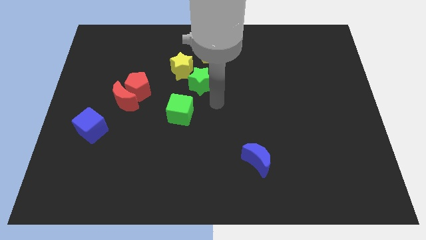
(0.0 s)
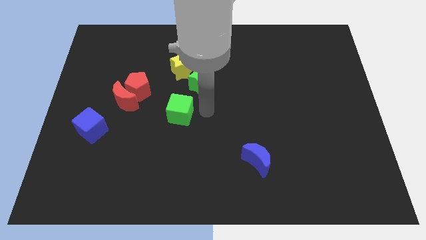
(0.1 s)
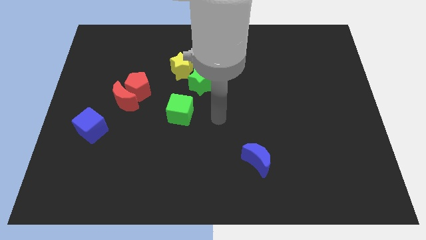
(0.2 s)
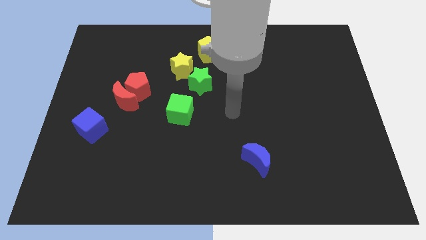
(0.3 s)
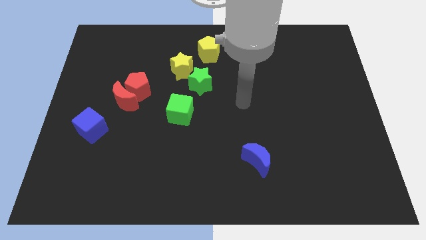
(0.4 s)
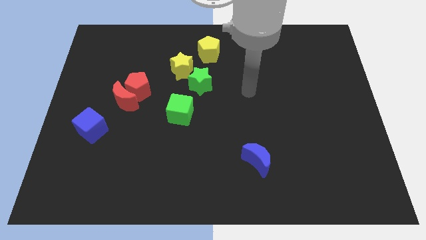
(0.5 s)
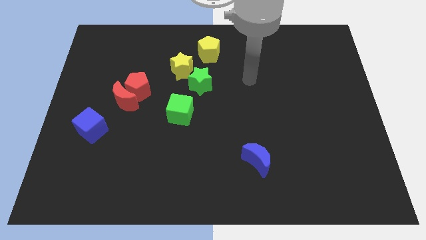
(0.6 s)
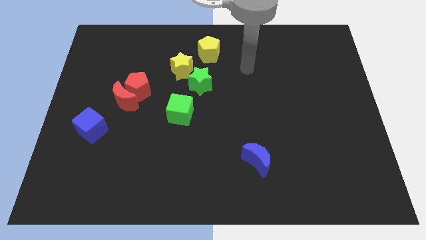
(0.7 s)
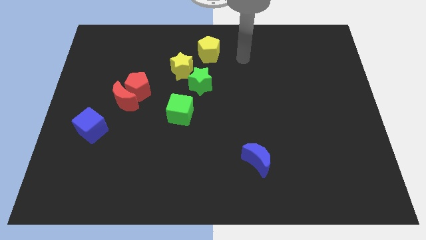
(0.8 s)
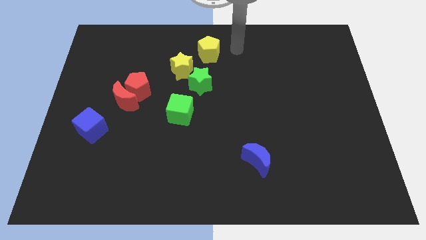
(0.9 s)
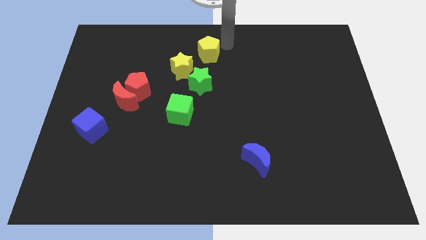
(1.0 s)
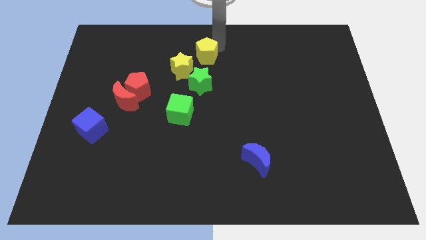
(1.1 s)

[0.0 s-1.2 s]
point your arm at the right of the yellow pentagon

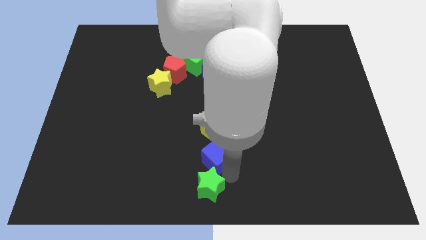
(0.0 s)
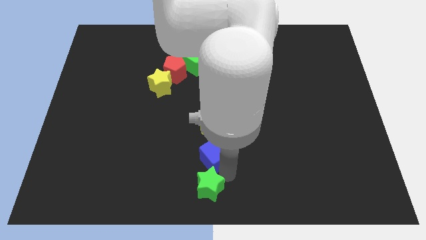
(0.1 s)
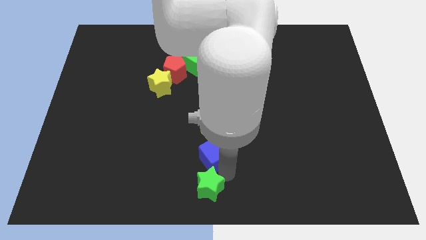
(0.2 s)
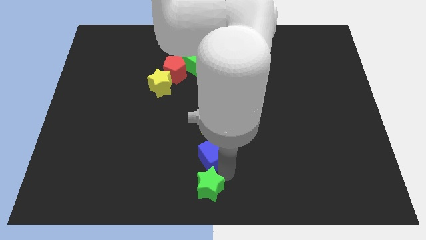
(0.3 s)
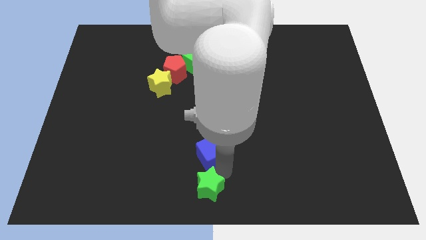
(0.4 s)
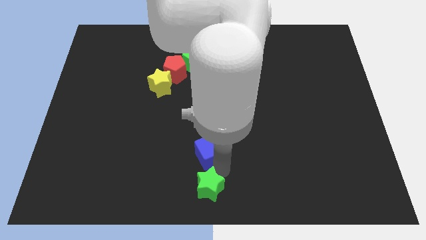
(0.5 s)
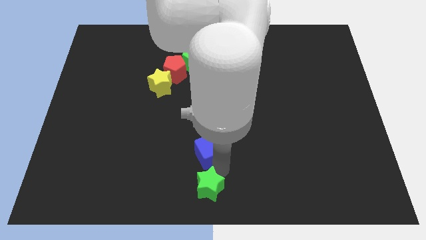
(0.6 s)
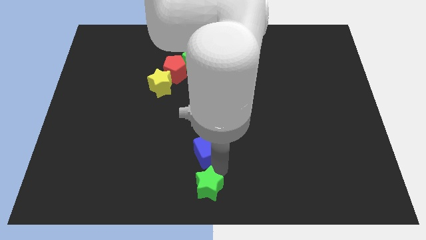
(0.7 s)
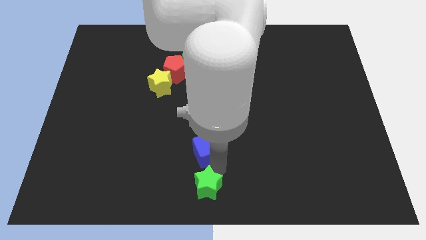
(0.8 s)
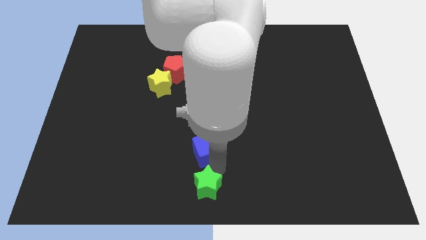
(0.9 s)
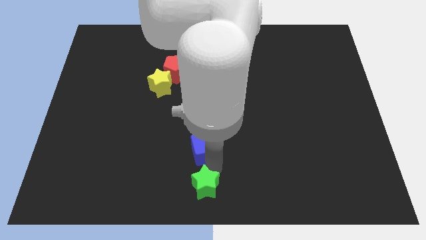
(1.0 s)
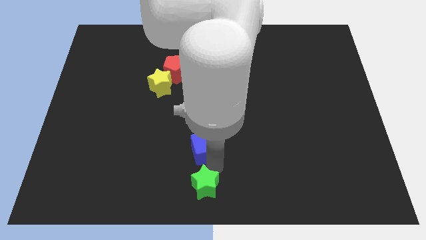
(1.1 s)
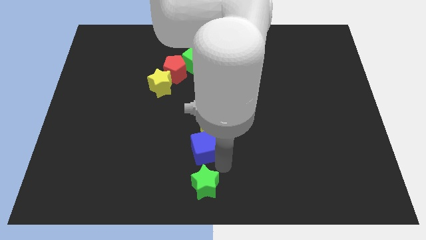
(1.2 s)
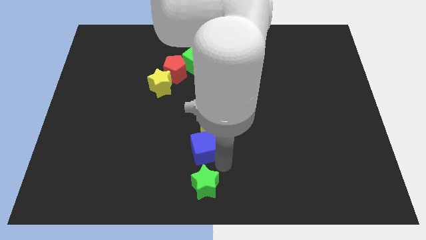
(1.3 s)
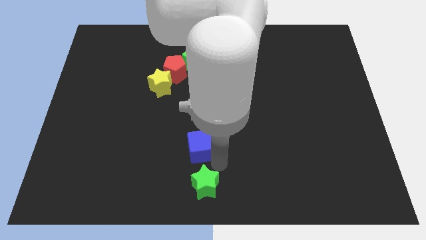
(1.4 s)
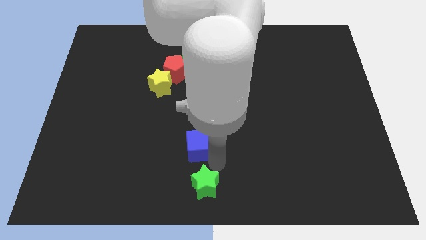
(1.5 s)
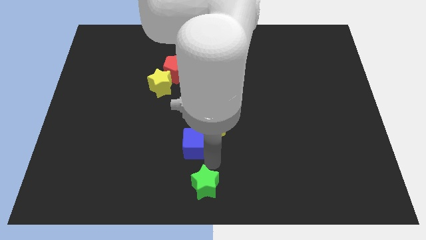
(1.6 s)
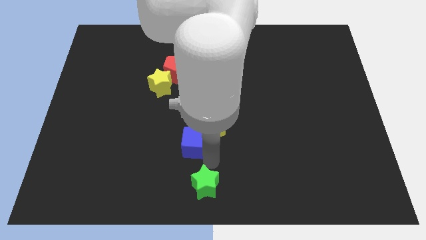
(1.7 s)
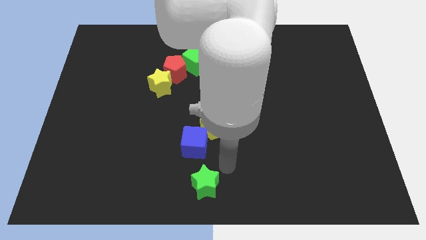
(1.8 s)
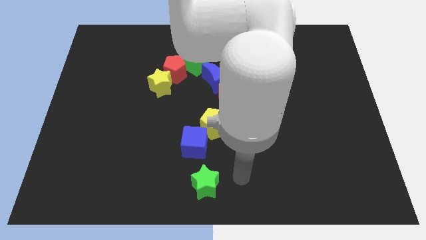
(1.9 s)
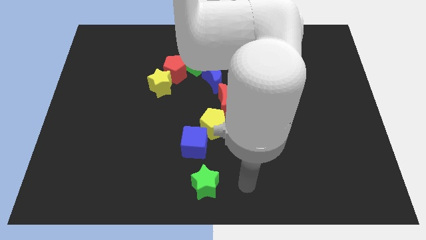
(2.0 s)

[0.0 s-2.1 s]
separate the blue cube and green star

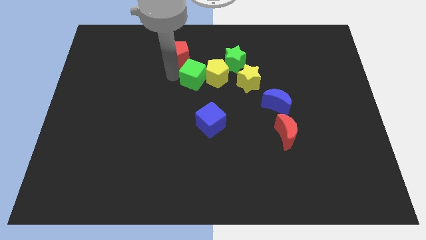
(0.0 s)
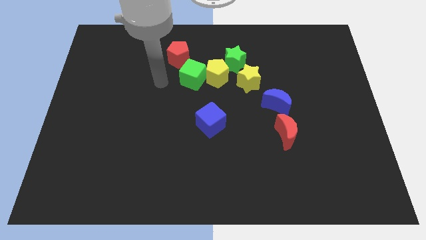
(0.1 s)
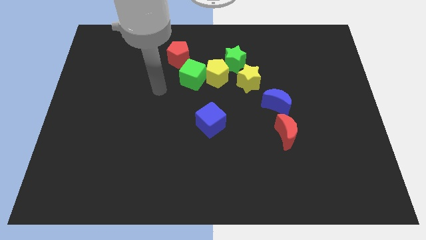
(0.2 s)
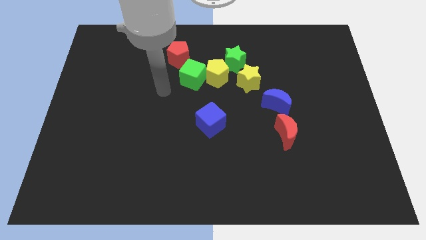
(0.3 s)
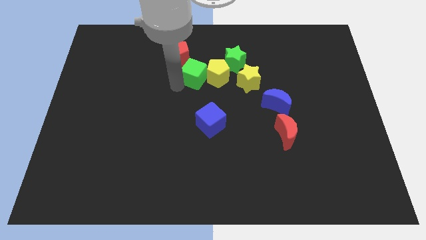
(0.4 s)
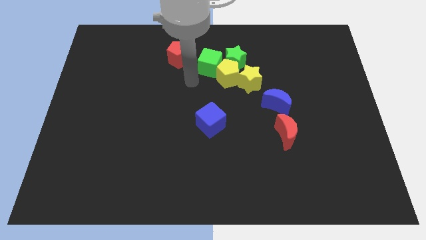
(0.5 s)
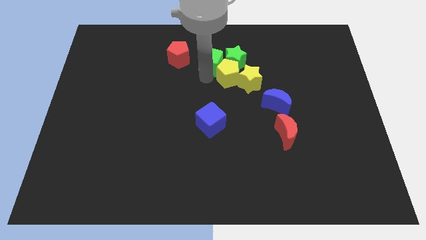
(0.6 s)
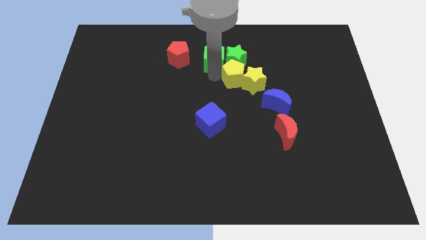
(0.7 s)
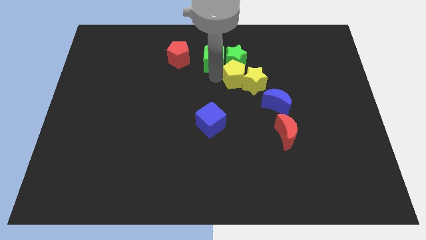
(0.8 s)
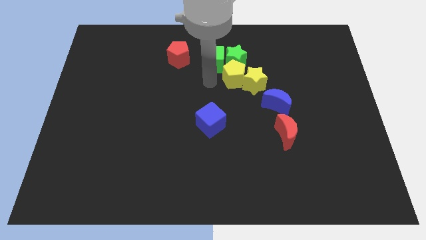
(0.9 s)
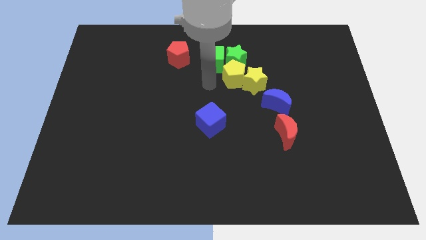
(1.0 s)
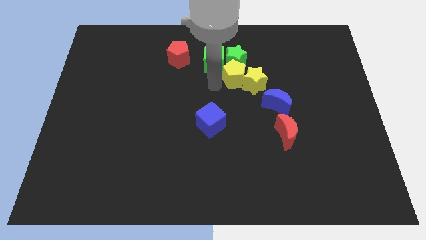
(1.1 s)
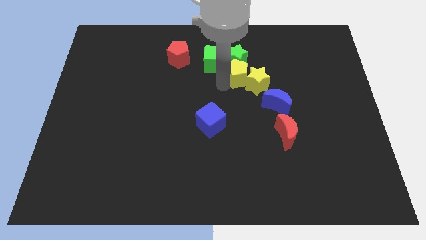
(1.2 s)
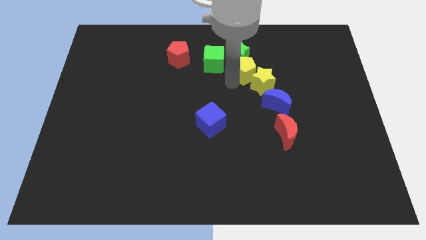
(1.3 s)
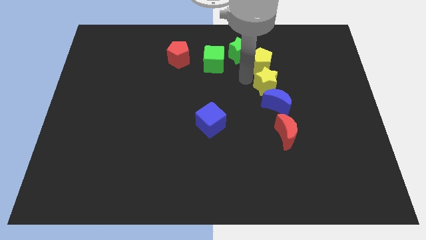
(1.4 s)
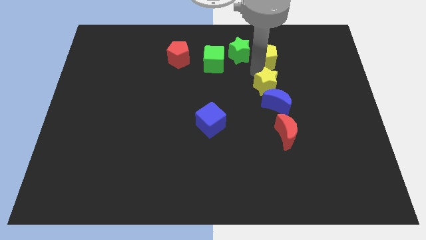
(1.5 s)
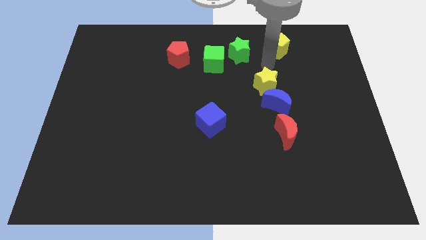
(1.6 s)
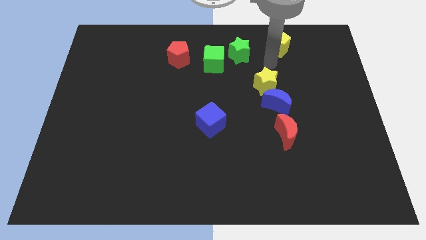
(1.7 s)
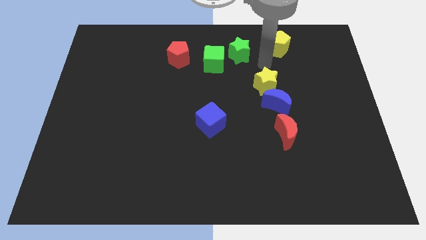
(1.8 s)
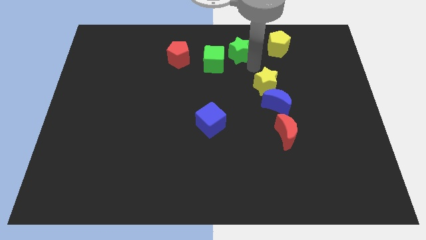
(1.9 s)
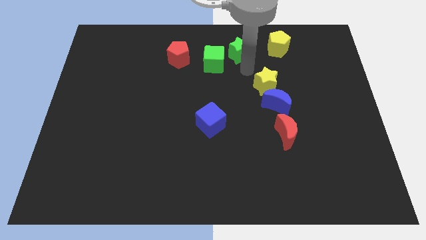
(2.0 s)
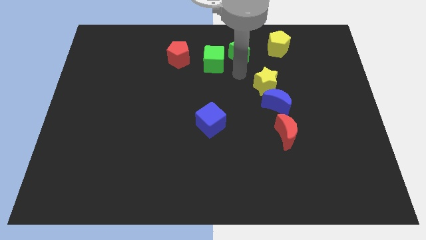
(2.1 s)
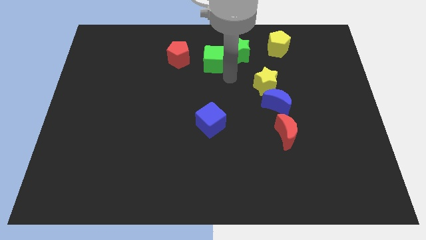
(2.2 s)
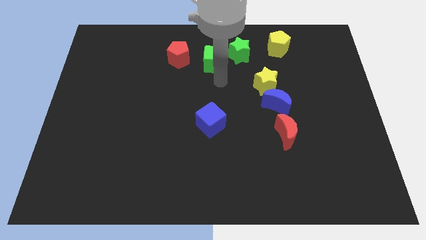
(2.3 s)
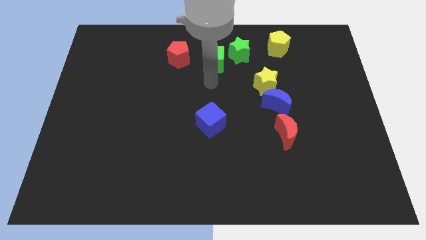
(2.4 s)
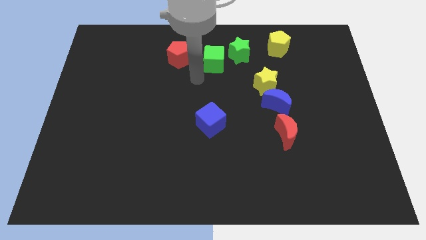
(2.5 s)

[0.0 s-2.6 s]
push the yellow pentagon to the top right side of the

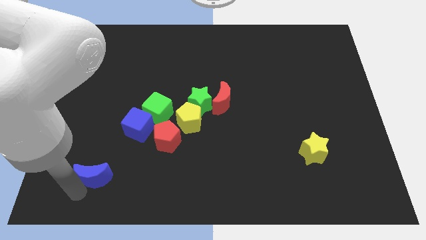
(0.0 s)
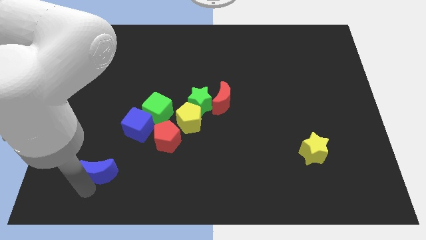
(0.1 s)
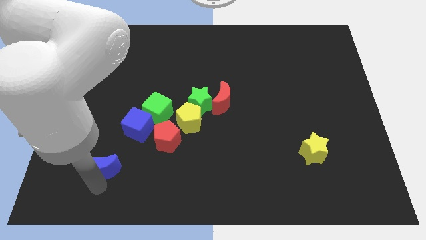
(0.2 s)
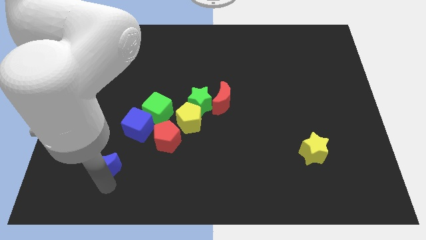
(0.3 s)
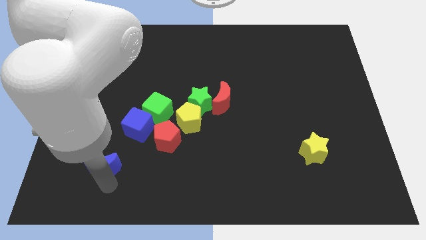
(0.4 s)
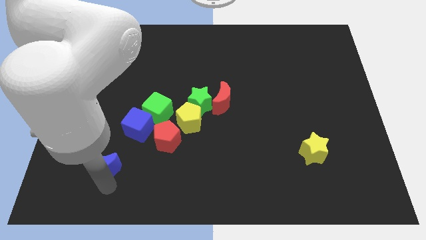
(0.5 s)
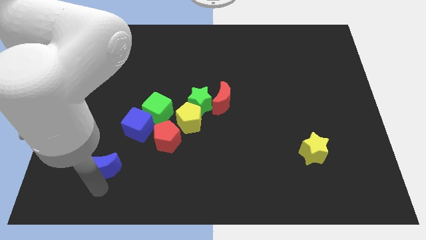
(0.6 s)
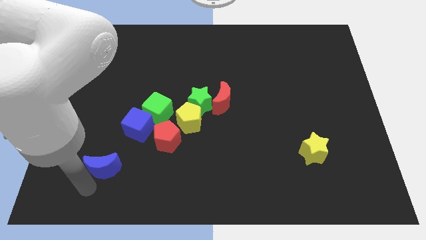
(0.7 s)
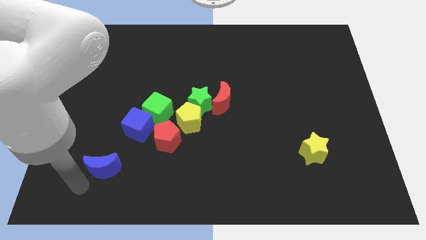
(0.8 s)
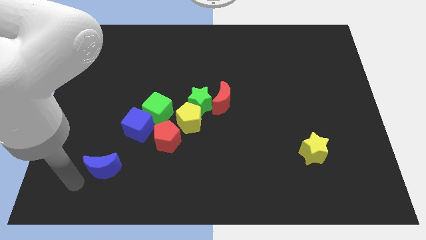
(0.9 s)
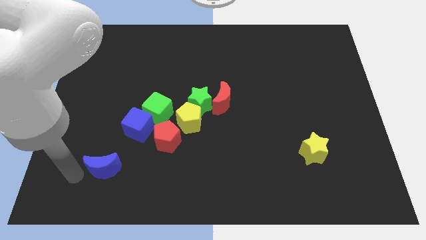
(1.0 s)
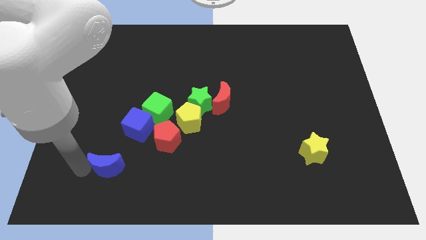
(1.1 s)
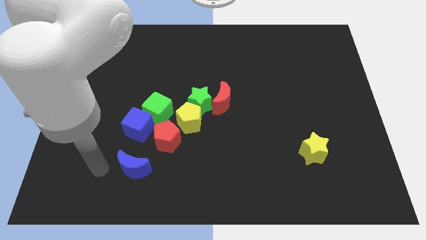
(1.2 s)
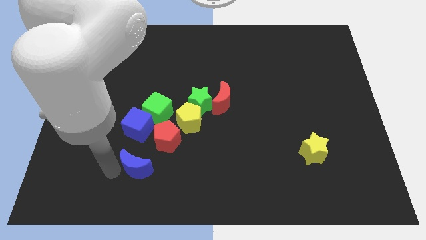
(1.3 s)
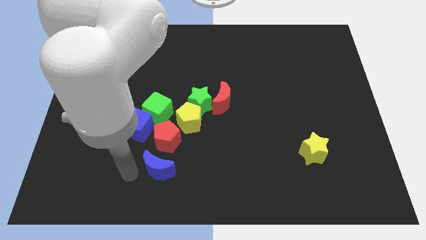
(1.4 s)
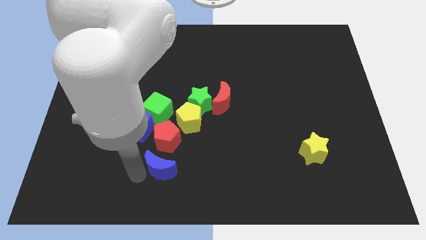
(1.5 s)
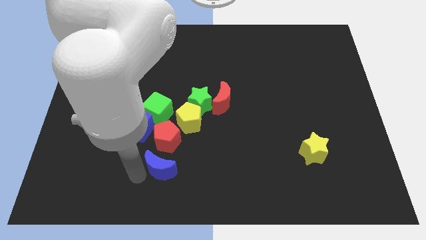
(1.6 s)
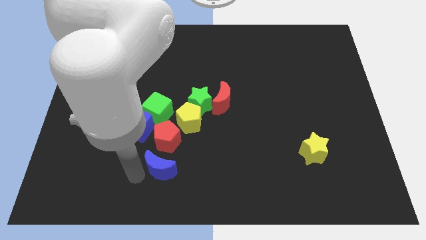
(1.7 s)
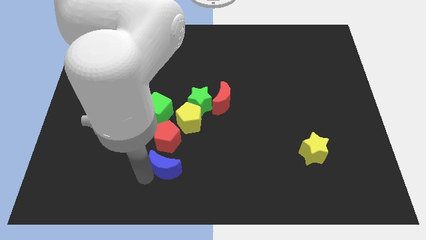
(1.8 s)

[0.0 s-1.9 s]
move the blue moon below the red pentagon

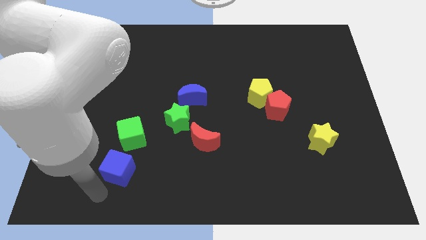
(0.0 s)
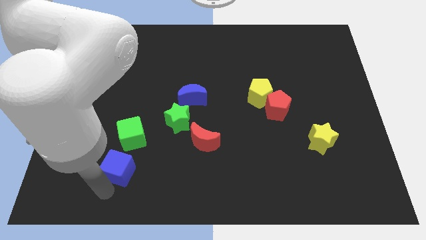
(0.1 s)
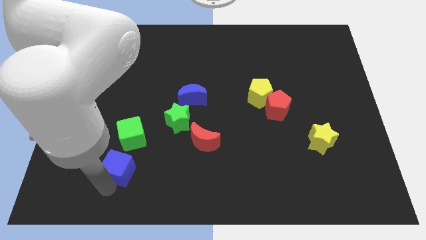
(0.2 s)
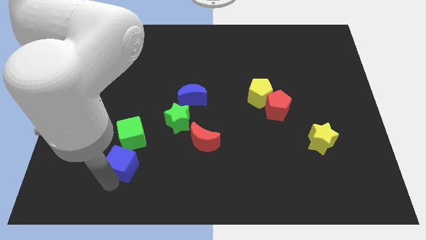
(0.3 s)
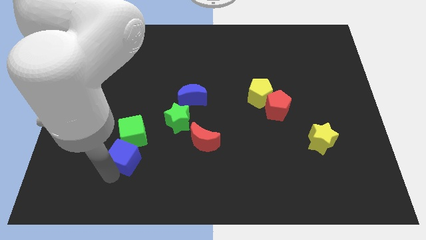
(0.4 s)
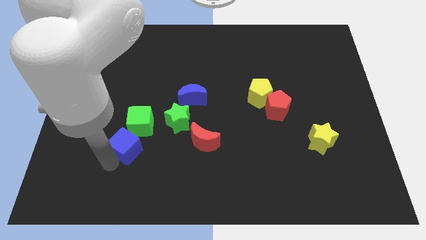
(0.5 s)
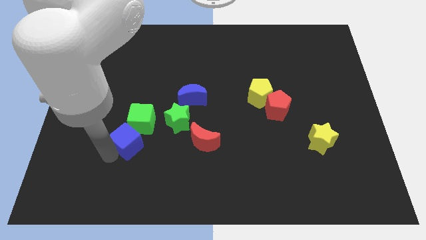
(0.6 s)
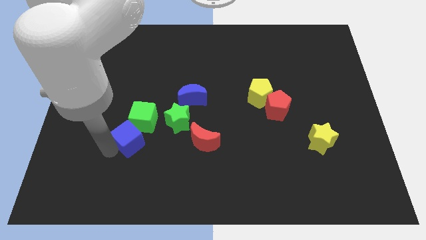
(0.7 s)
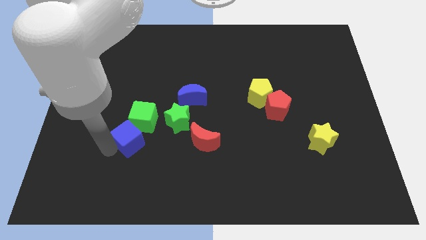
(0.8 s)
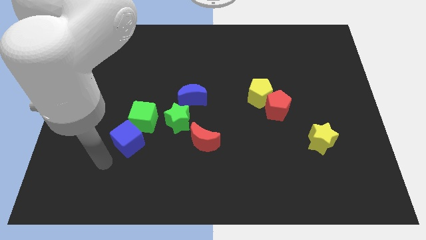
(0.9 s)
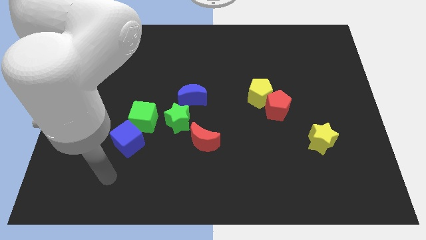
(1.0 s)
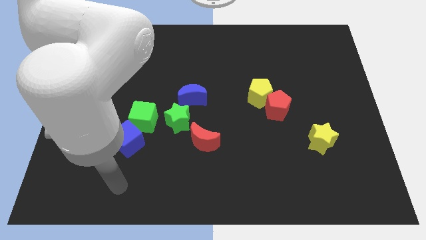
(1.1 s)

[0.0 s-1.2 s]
push the blue cube towards the green cube
